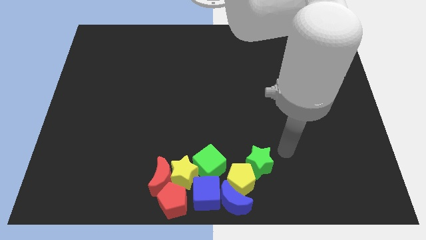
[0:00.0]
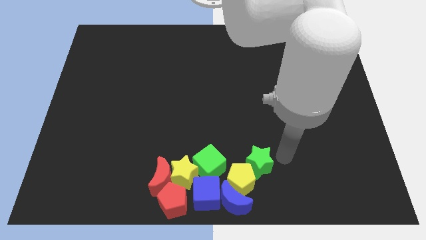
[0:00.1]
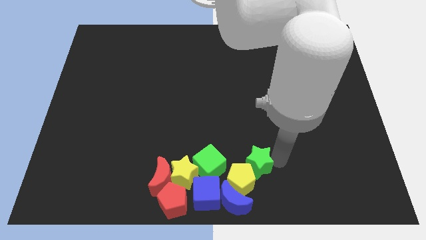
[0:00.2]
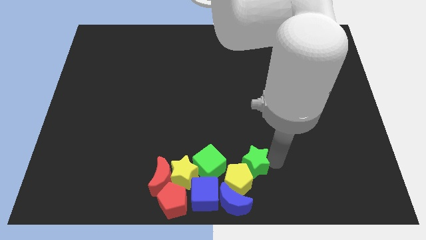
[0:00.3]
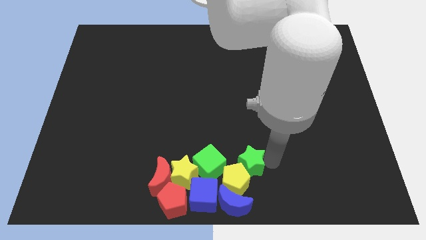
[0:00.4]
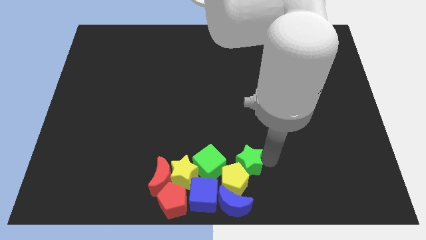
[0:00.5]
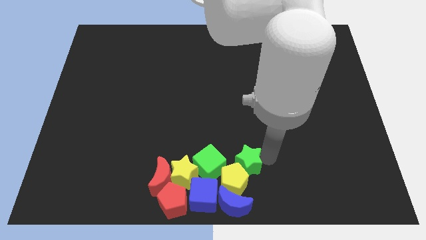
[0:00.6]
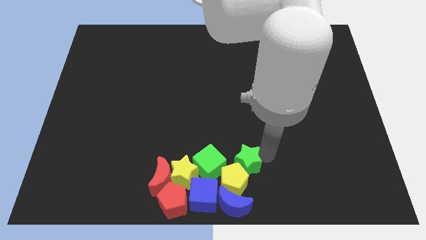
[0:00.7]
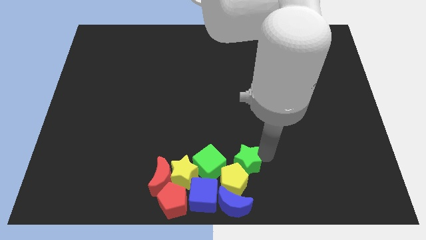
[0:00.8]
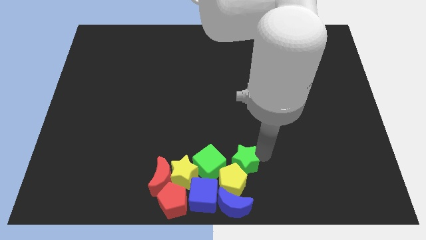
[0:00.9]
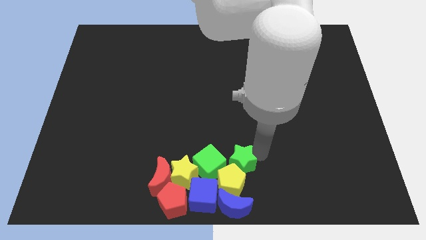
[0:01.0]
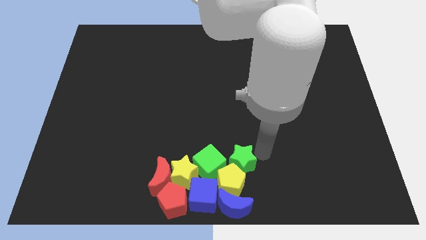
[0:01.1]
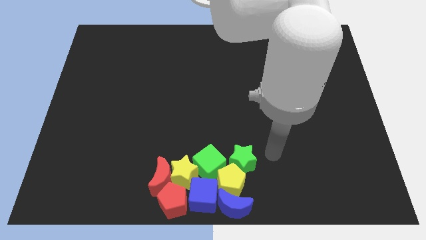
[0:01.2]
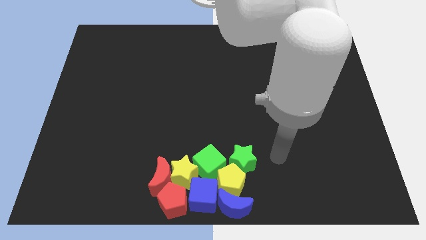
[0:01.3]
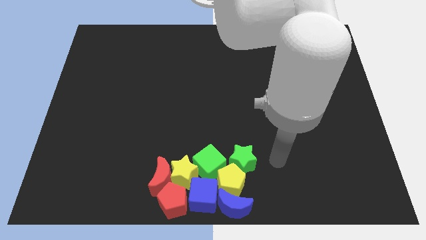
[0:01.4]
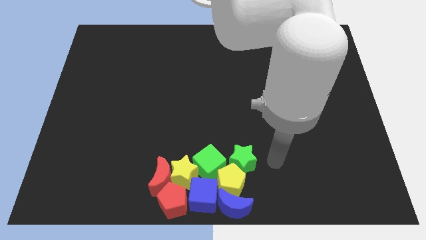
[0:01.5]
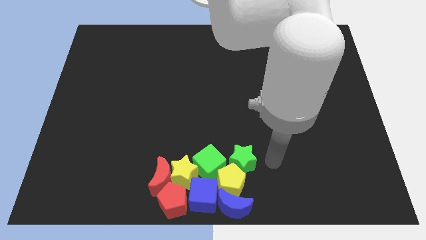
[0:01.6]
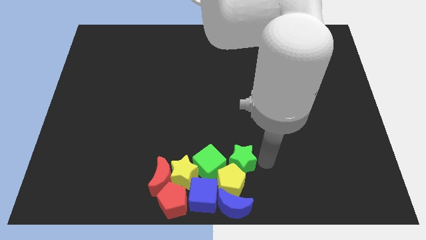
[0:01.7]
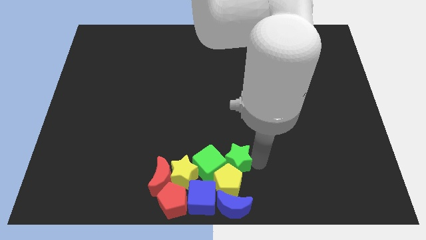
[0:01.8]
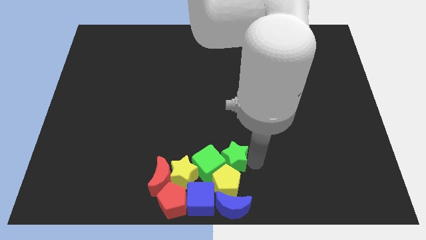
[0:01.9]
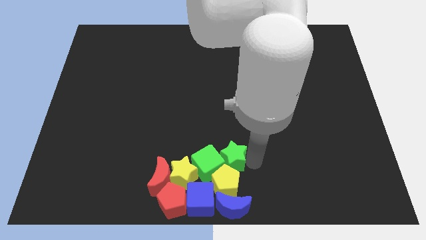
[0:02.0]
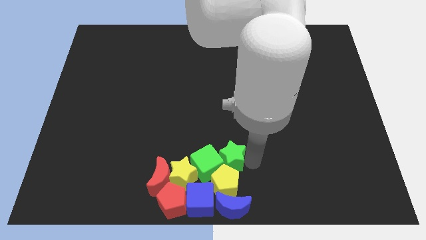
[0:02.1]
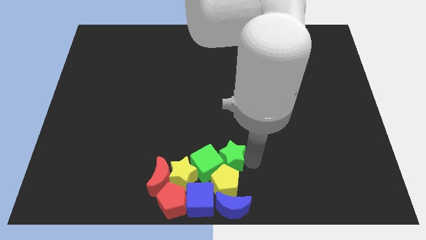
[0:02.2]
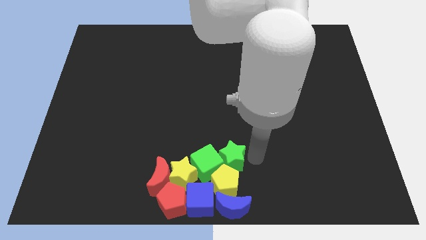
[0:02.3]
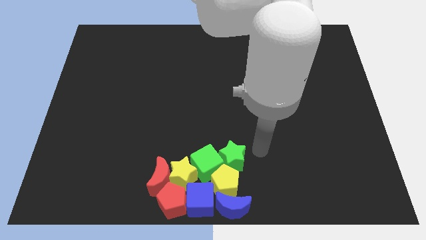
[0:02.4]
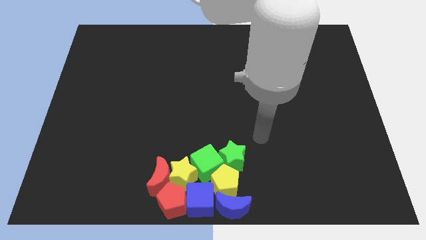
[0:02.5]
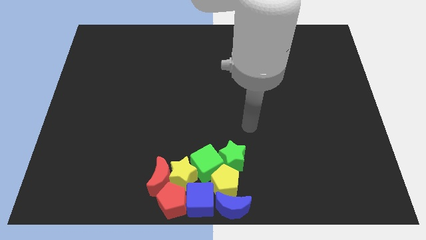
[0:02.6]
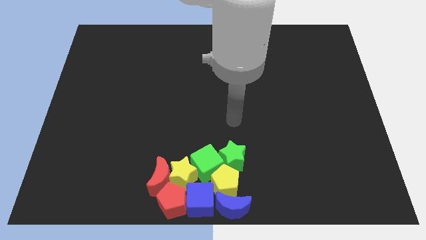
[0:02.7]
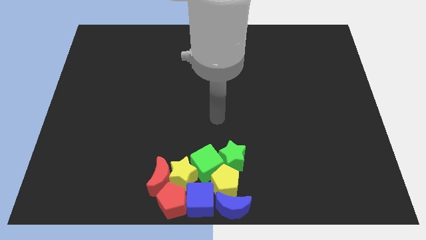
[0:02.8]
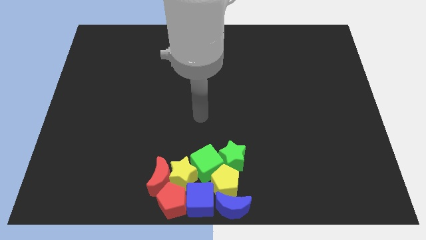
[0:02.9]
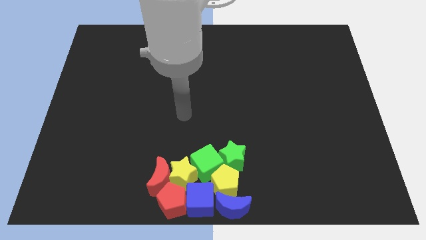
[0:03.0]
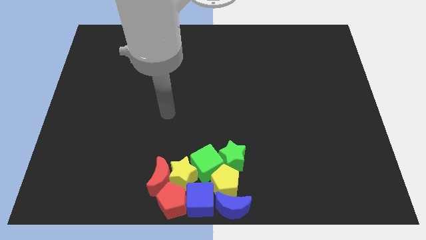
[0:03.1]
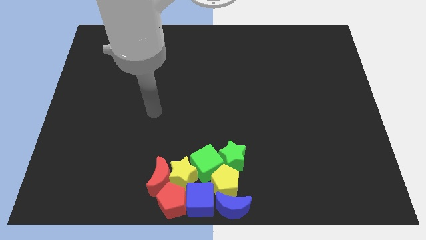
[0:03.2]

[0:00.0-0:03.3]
move green star into green cube

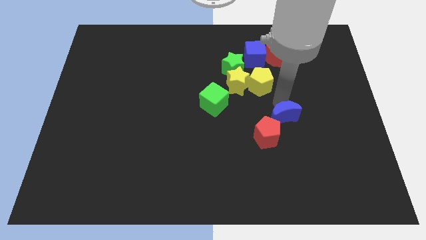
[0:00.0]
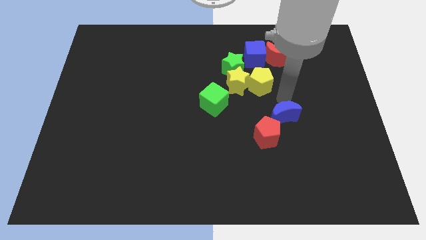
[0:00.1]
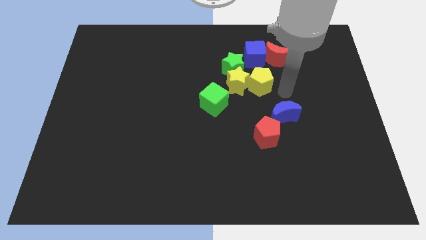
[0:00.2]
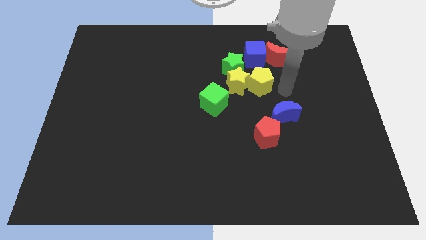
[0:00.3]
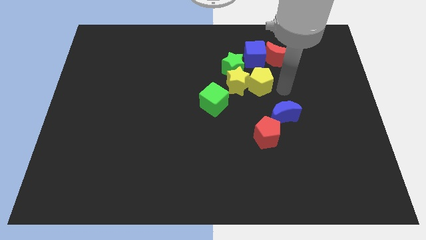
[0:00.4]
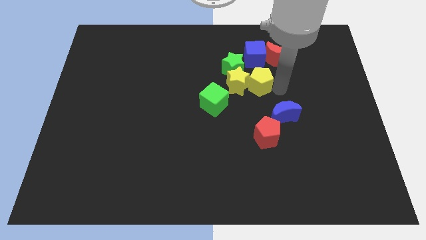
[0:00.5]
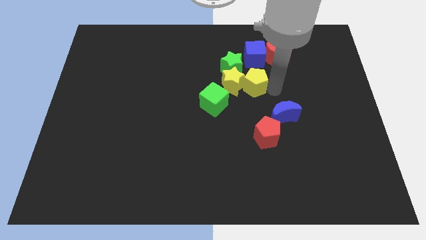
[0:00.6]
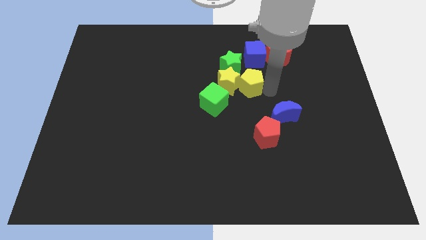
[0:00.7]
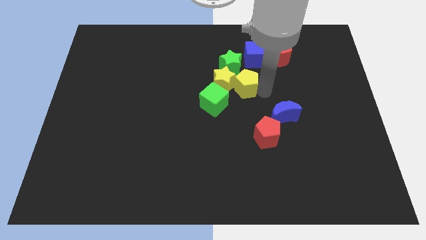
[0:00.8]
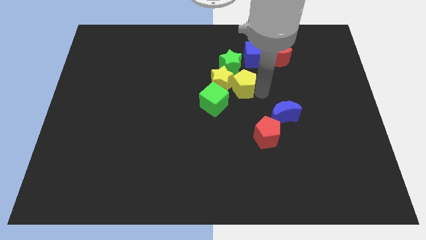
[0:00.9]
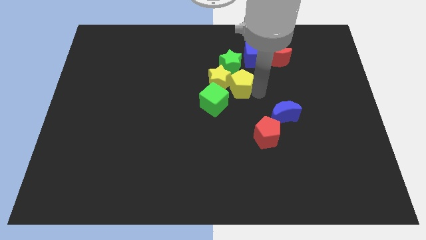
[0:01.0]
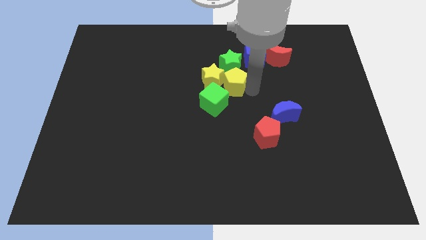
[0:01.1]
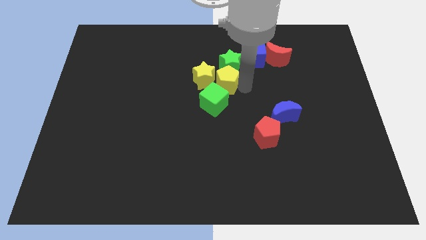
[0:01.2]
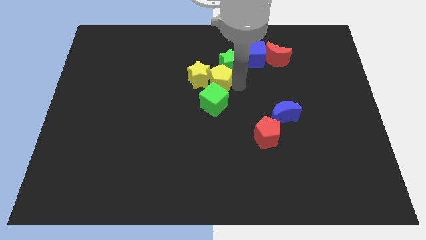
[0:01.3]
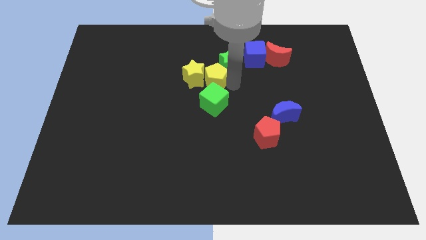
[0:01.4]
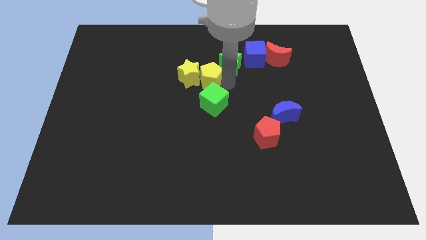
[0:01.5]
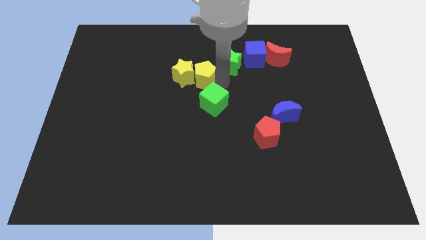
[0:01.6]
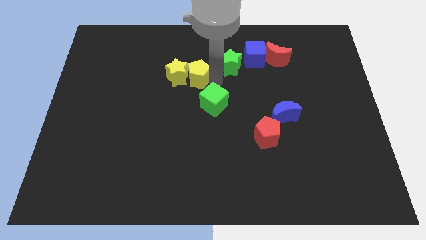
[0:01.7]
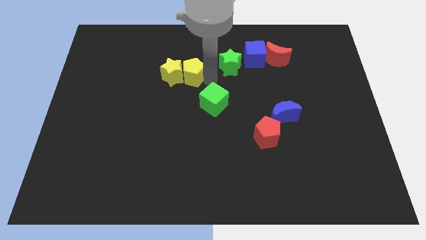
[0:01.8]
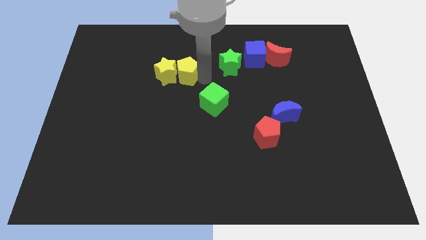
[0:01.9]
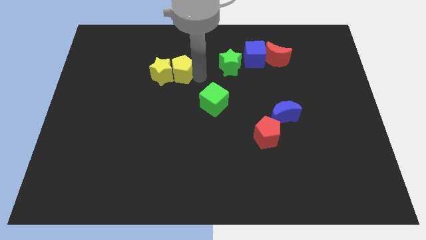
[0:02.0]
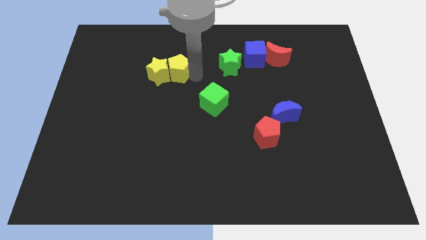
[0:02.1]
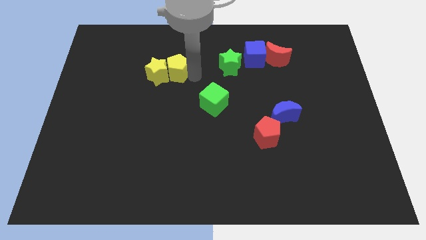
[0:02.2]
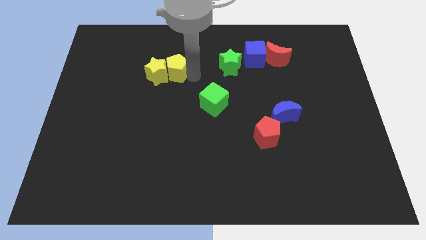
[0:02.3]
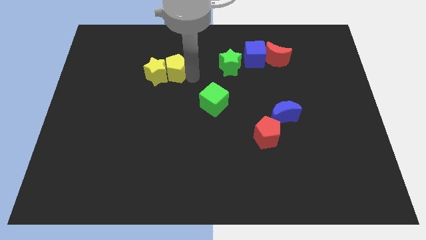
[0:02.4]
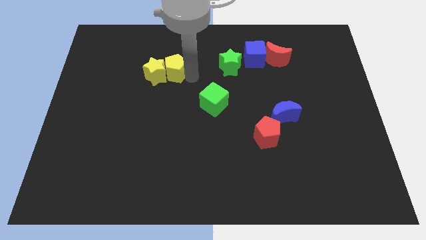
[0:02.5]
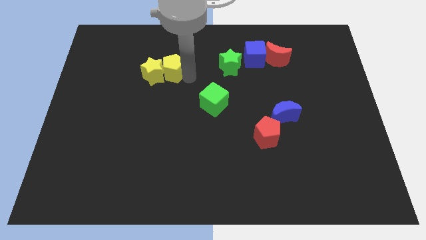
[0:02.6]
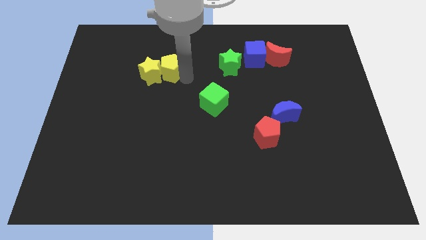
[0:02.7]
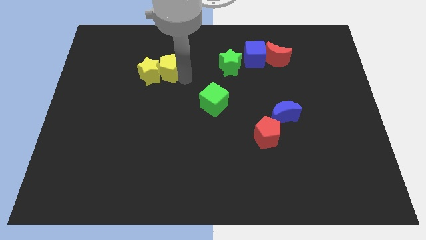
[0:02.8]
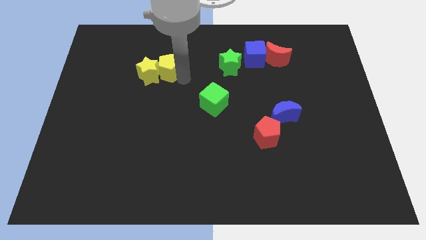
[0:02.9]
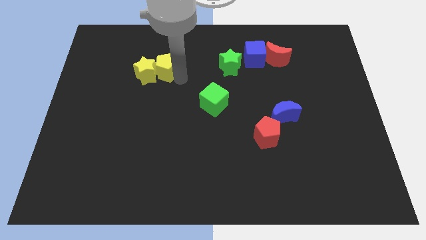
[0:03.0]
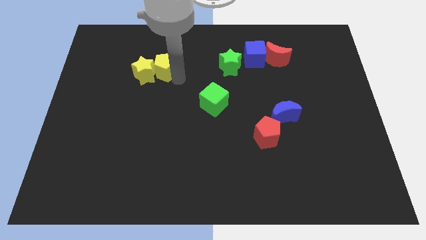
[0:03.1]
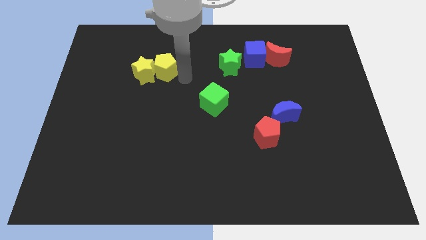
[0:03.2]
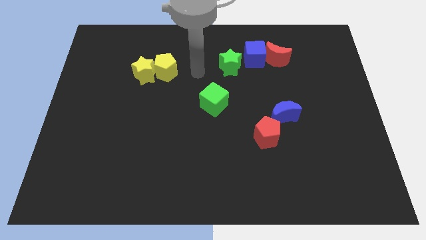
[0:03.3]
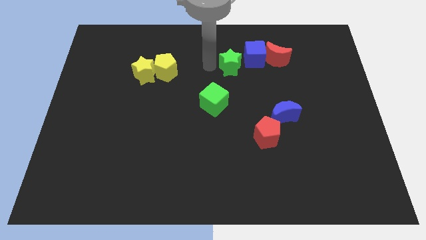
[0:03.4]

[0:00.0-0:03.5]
push the yellow star and yellow pentagon towards the top left of the board

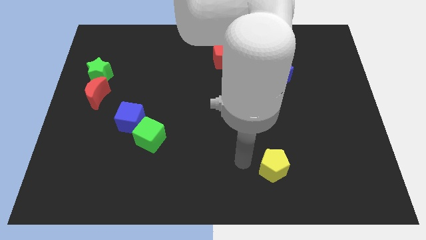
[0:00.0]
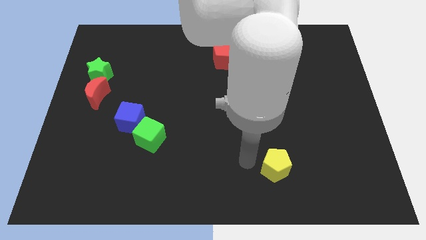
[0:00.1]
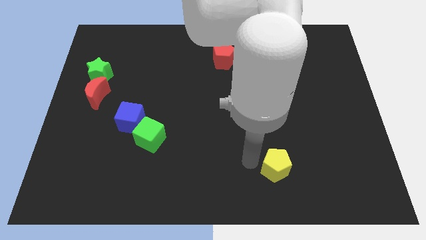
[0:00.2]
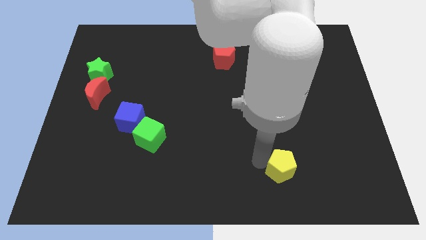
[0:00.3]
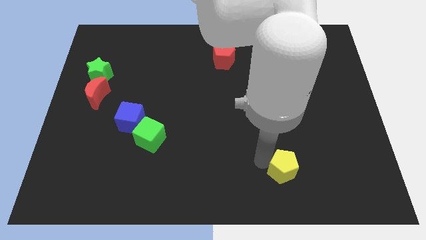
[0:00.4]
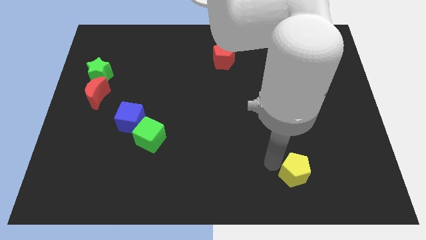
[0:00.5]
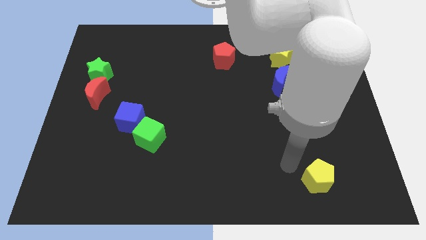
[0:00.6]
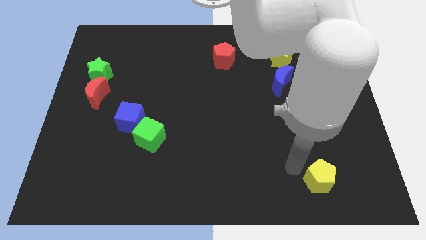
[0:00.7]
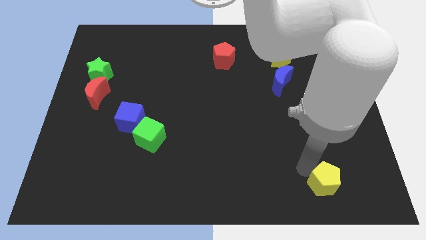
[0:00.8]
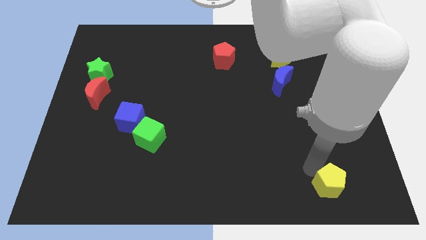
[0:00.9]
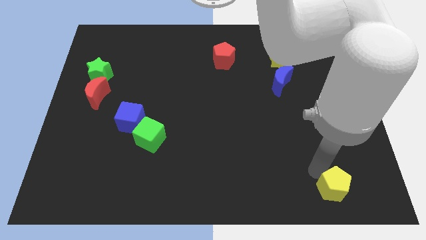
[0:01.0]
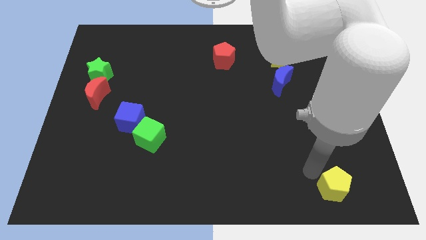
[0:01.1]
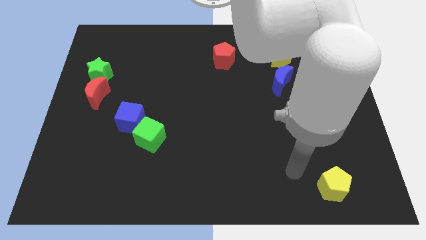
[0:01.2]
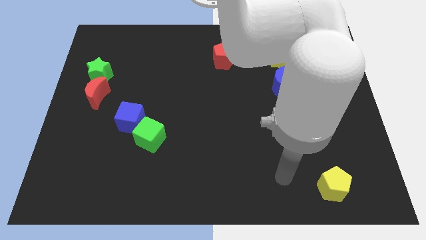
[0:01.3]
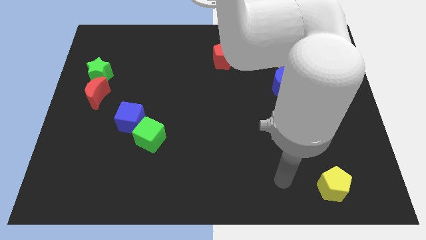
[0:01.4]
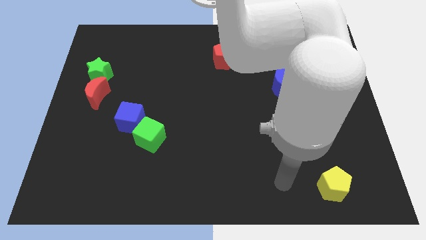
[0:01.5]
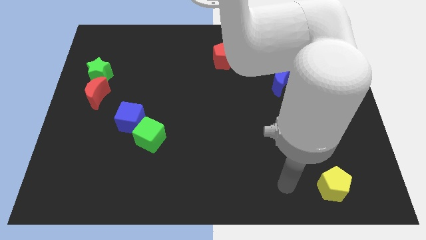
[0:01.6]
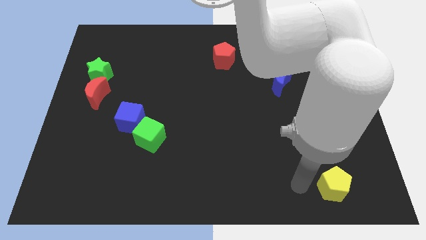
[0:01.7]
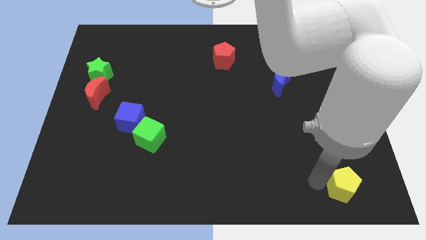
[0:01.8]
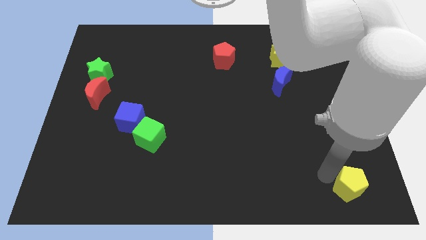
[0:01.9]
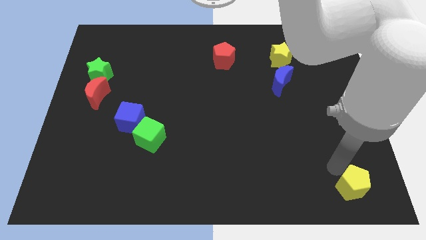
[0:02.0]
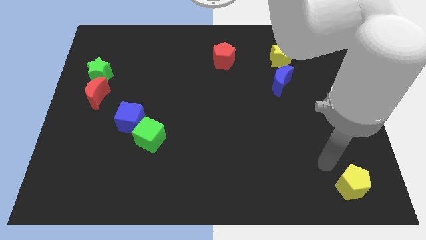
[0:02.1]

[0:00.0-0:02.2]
move the yellow pentagon to the bottom right of the board
